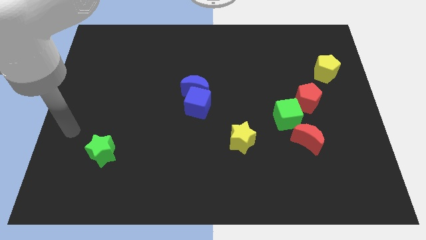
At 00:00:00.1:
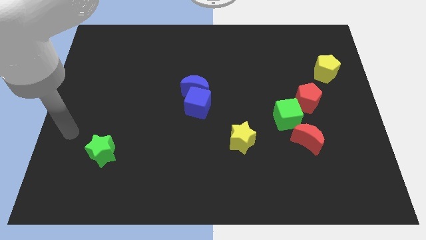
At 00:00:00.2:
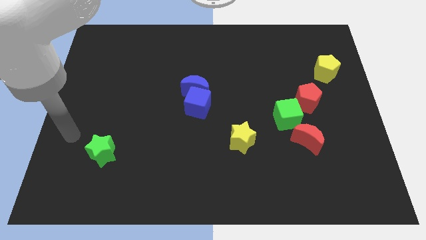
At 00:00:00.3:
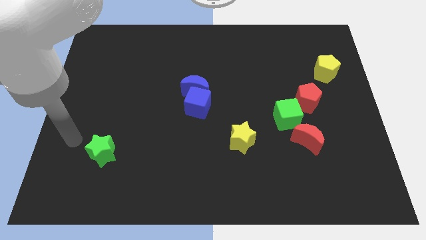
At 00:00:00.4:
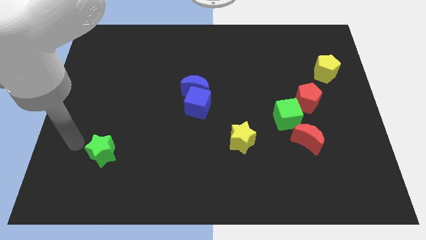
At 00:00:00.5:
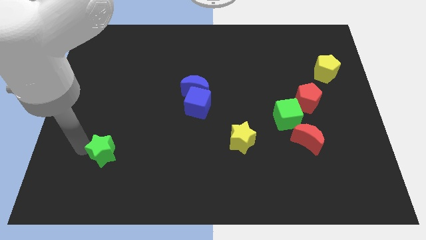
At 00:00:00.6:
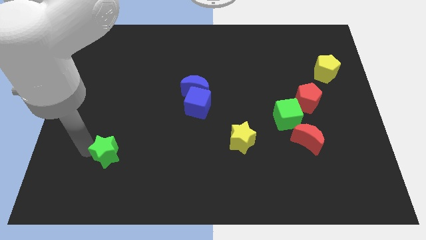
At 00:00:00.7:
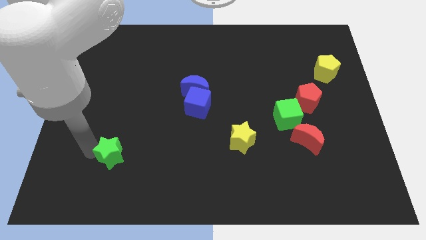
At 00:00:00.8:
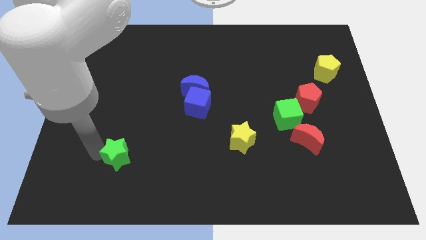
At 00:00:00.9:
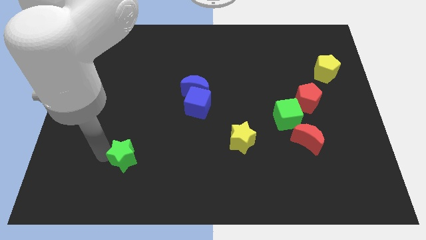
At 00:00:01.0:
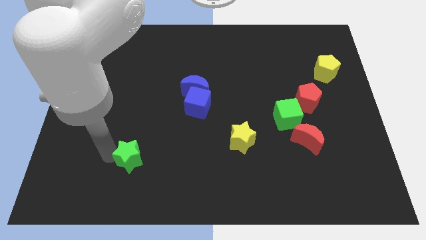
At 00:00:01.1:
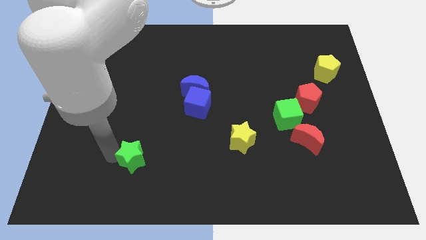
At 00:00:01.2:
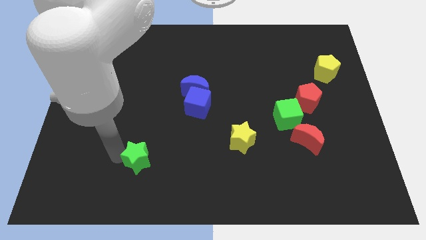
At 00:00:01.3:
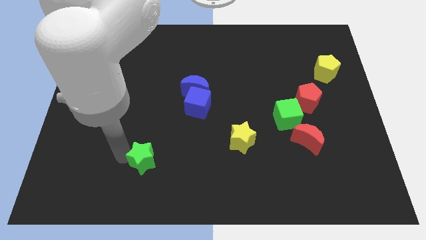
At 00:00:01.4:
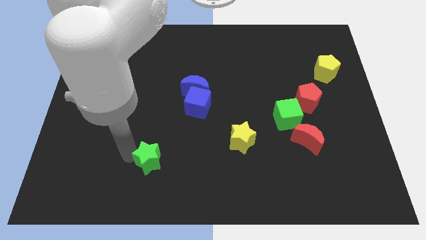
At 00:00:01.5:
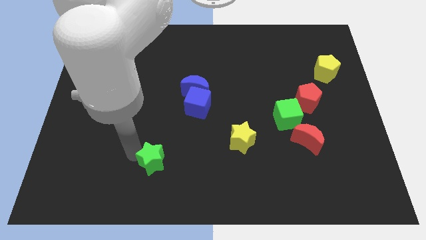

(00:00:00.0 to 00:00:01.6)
move the green star diagonally to the bottom left of the blue cube

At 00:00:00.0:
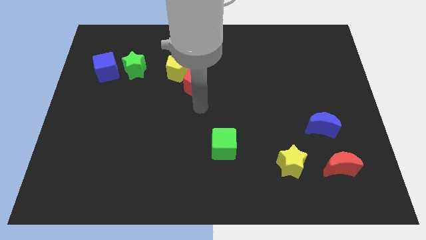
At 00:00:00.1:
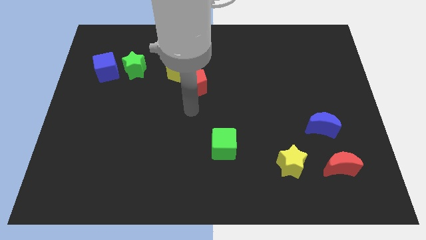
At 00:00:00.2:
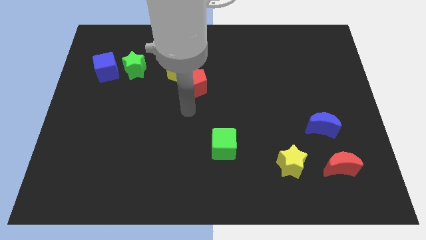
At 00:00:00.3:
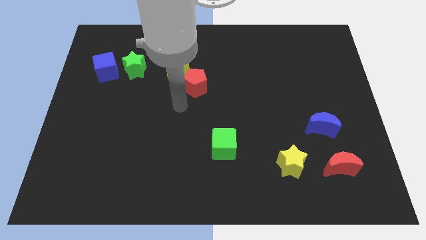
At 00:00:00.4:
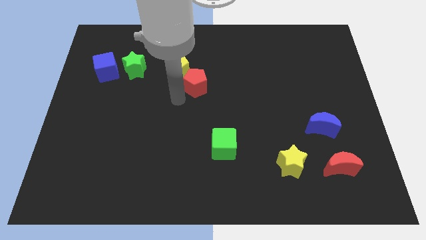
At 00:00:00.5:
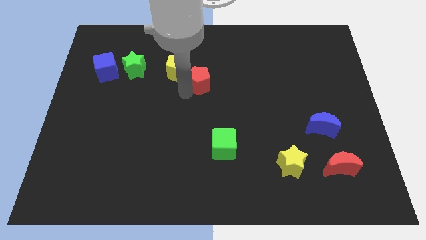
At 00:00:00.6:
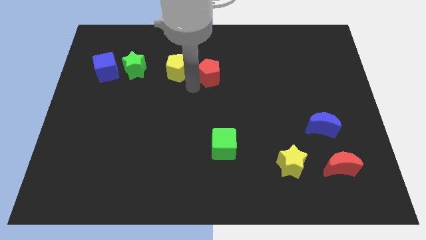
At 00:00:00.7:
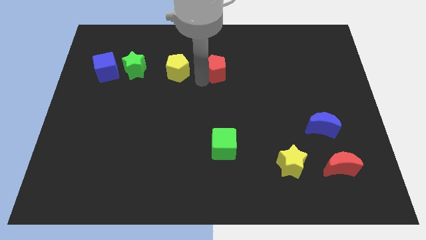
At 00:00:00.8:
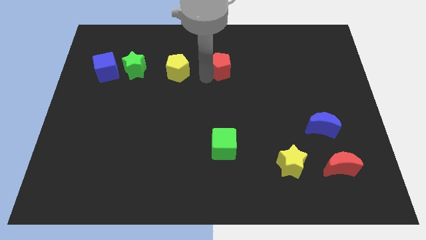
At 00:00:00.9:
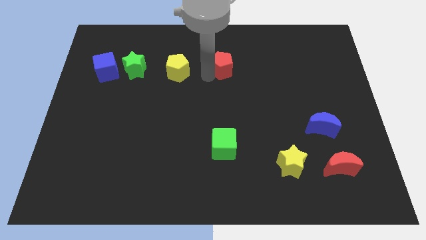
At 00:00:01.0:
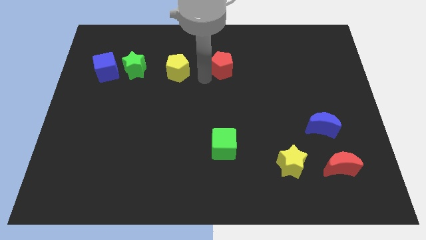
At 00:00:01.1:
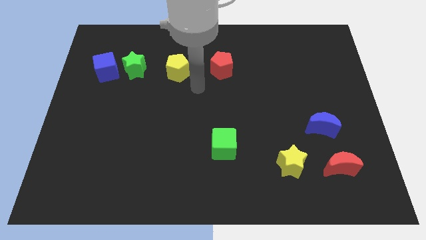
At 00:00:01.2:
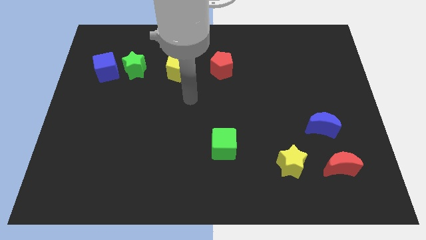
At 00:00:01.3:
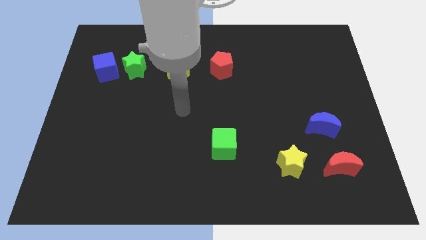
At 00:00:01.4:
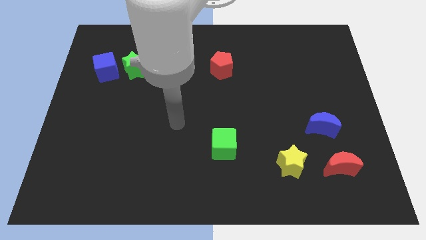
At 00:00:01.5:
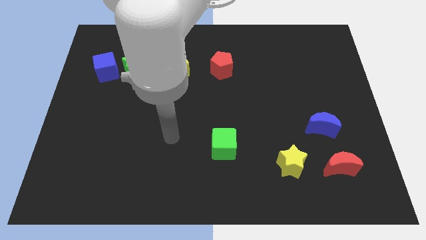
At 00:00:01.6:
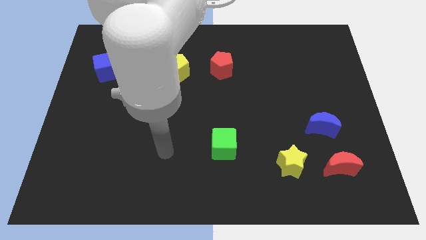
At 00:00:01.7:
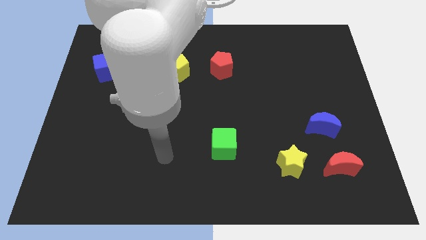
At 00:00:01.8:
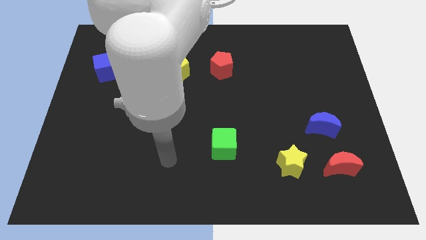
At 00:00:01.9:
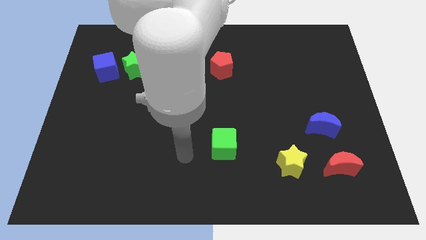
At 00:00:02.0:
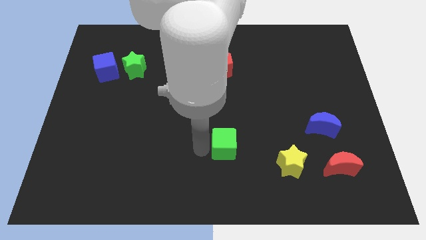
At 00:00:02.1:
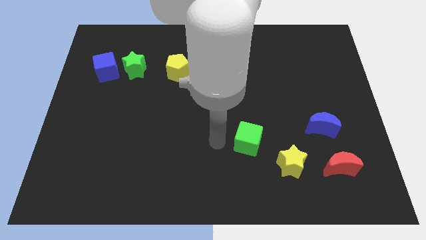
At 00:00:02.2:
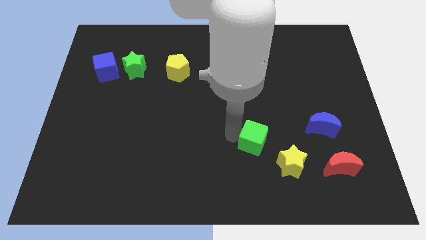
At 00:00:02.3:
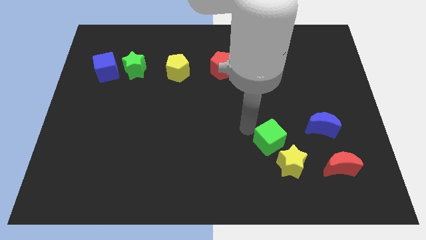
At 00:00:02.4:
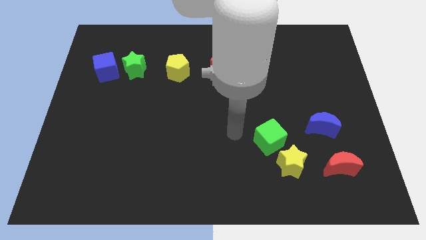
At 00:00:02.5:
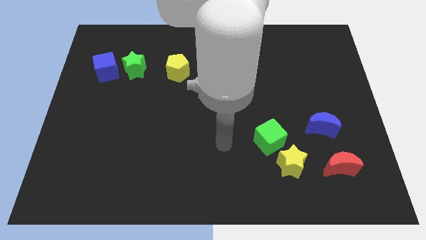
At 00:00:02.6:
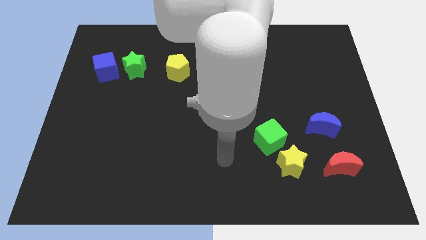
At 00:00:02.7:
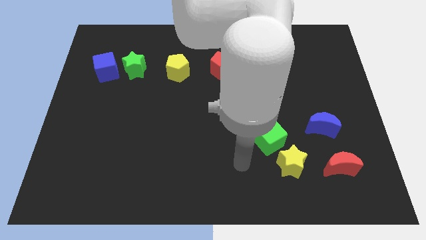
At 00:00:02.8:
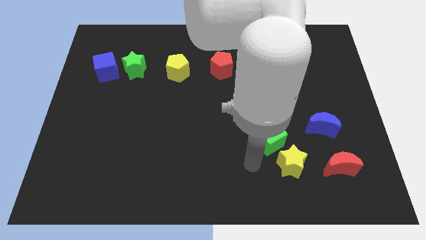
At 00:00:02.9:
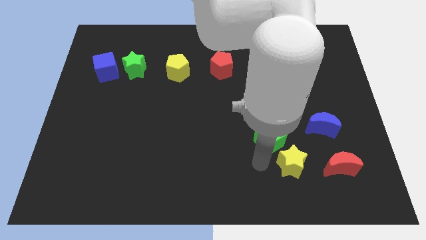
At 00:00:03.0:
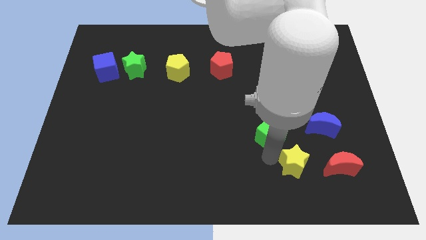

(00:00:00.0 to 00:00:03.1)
move the green cube to the top left side of the yellow star

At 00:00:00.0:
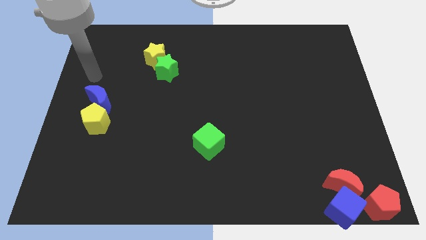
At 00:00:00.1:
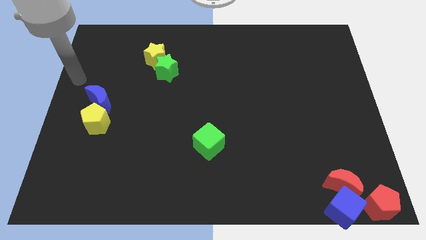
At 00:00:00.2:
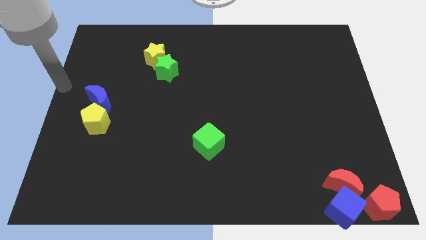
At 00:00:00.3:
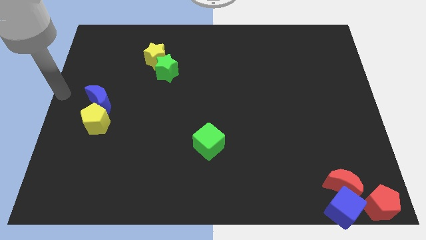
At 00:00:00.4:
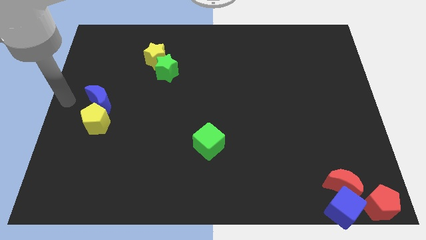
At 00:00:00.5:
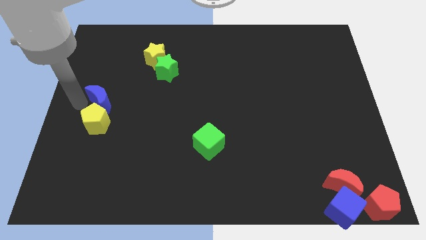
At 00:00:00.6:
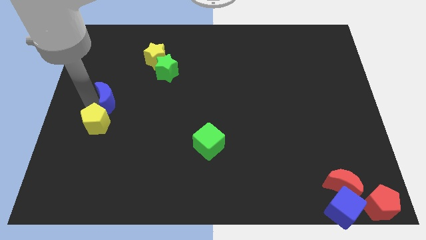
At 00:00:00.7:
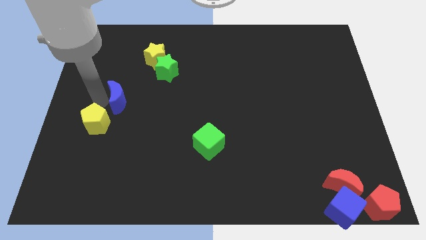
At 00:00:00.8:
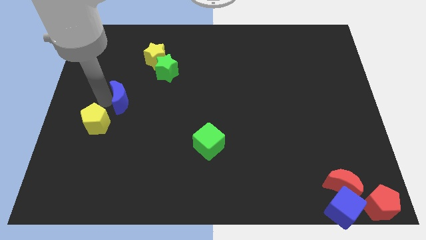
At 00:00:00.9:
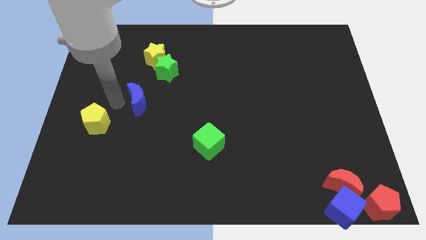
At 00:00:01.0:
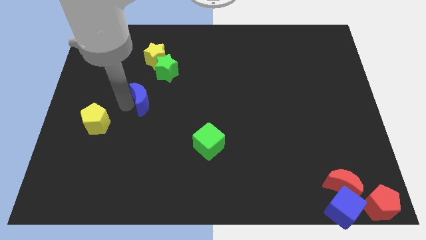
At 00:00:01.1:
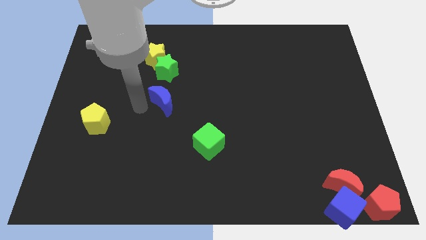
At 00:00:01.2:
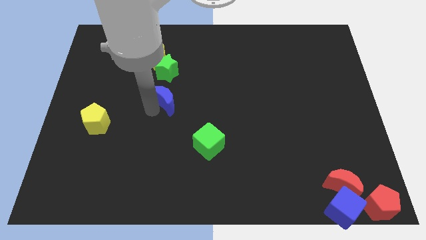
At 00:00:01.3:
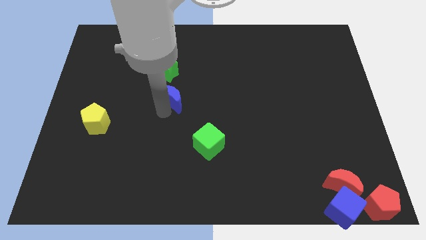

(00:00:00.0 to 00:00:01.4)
move the blue moon to the bottom side of the green star

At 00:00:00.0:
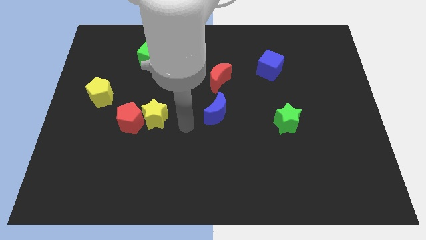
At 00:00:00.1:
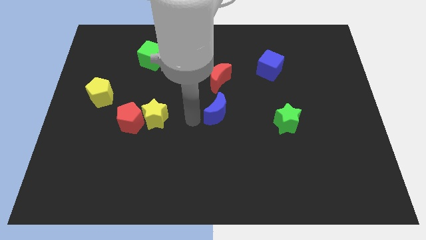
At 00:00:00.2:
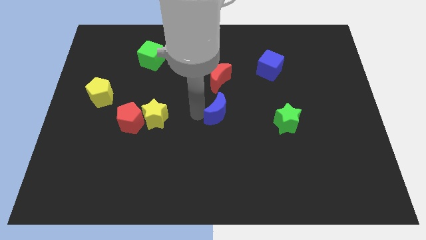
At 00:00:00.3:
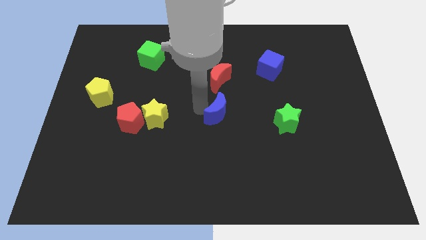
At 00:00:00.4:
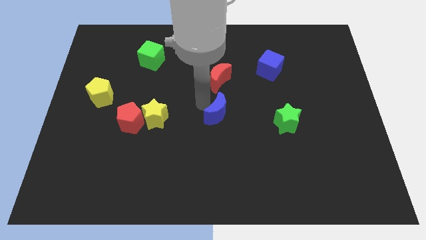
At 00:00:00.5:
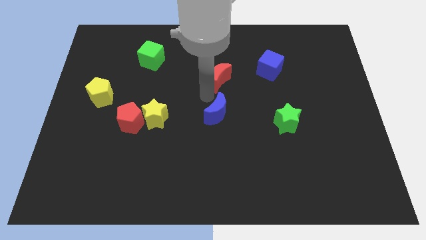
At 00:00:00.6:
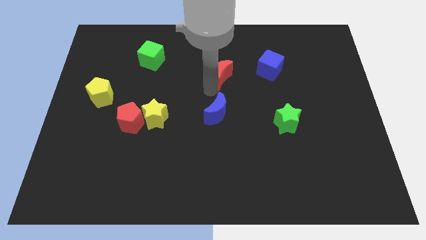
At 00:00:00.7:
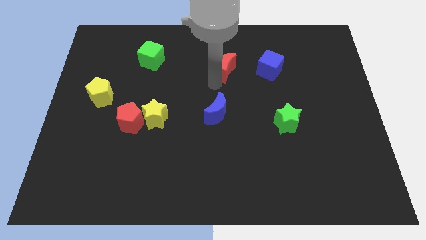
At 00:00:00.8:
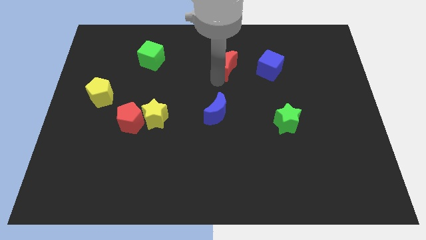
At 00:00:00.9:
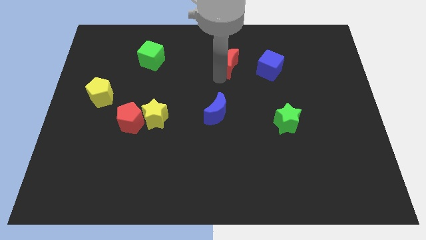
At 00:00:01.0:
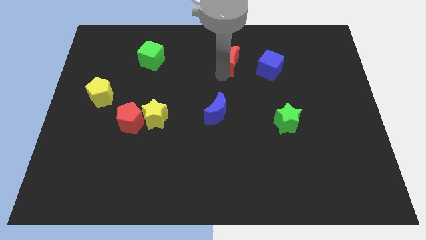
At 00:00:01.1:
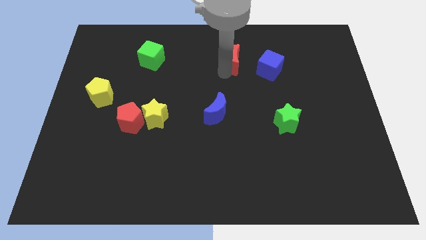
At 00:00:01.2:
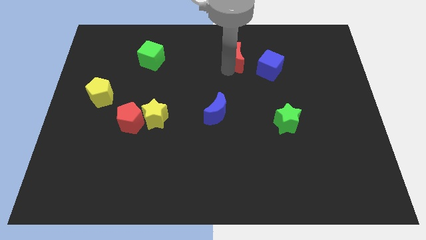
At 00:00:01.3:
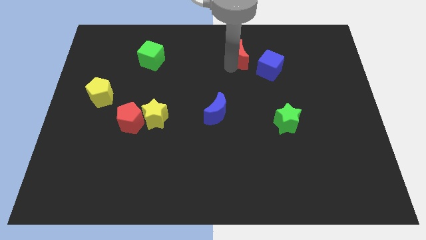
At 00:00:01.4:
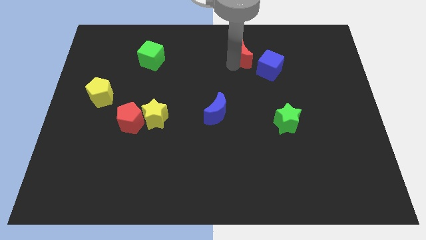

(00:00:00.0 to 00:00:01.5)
push the red moon upward

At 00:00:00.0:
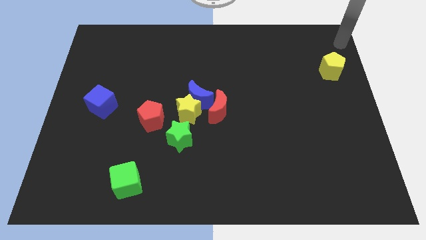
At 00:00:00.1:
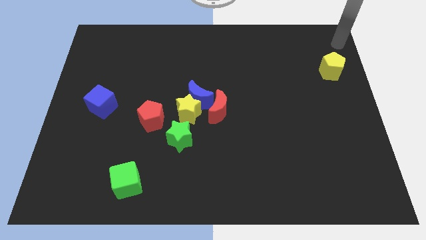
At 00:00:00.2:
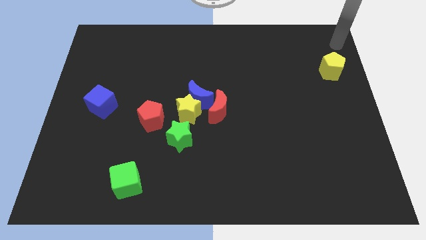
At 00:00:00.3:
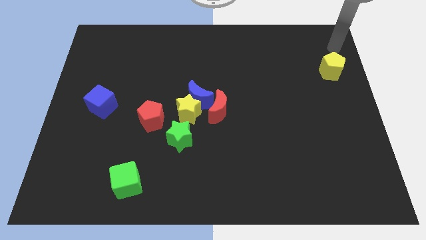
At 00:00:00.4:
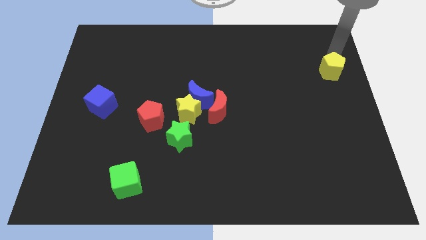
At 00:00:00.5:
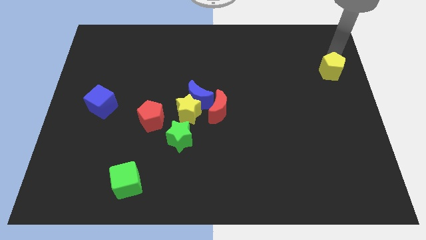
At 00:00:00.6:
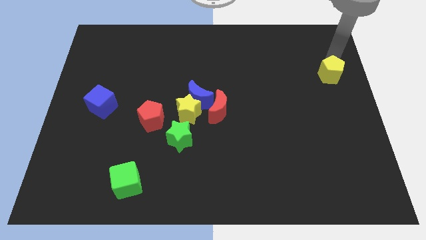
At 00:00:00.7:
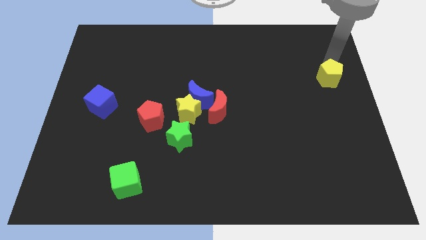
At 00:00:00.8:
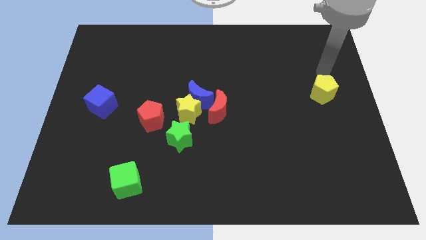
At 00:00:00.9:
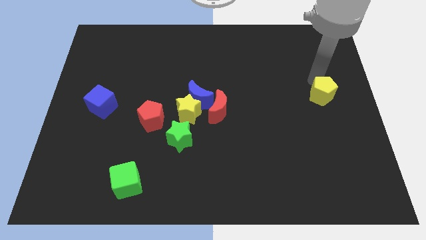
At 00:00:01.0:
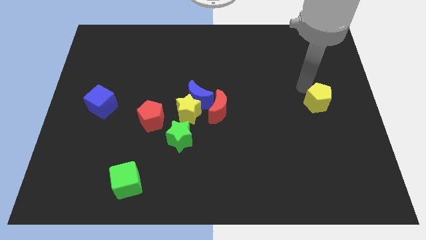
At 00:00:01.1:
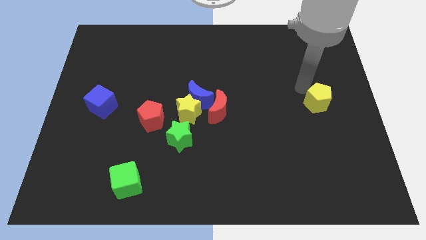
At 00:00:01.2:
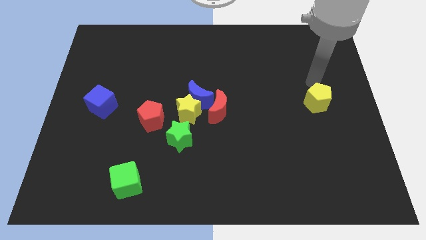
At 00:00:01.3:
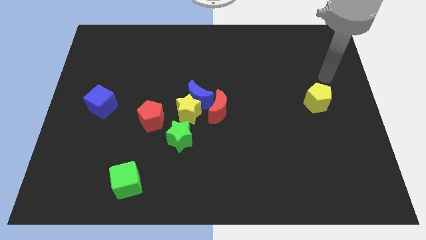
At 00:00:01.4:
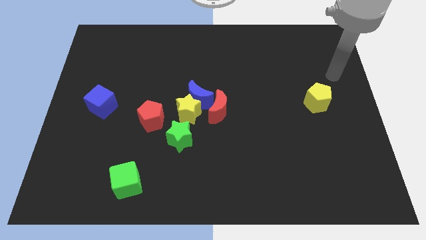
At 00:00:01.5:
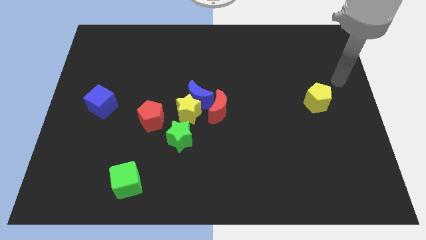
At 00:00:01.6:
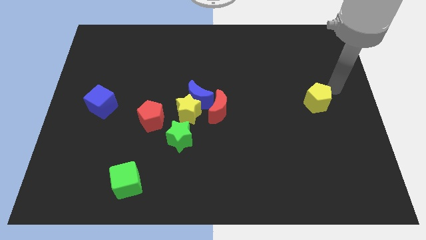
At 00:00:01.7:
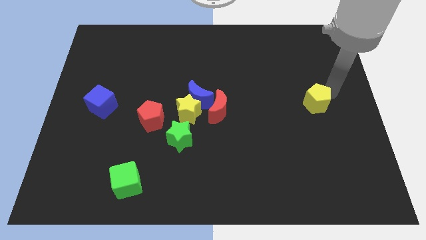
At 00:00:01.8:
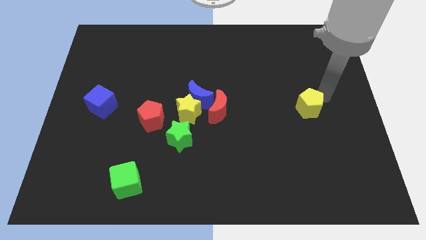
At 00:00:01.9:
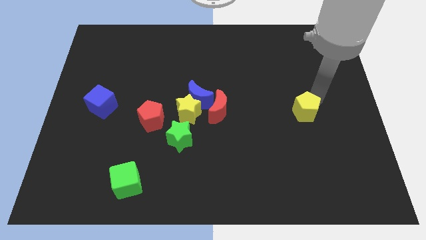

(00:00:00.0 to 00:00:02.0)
place the yellow pentagon parallel to the red moon
